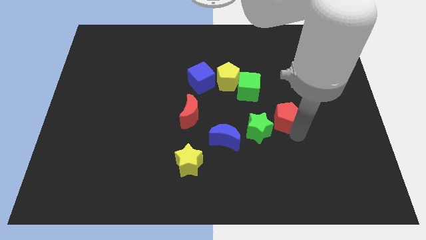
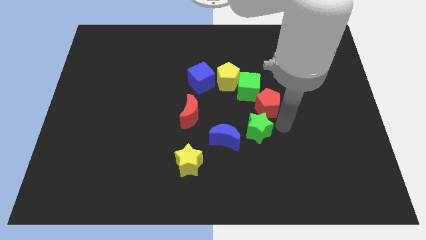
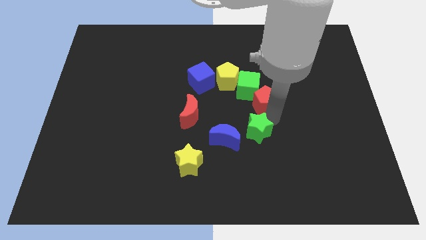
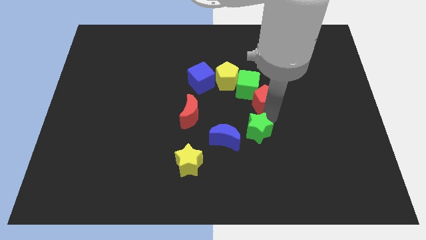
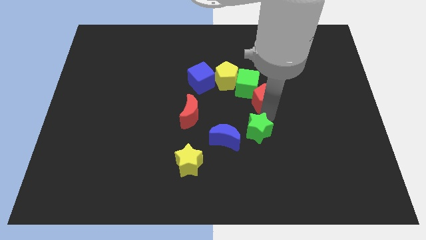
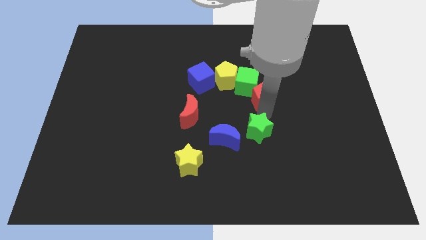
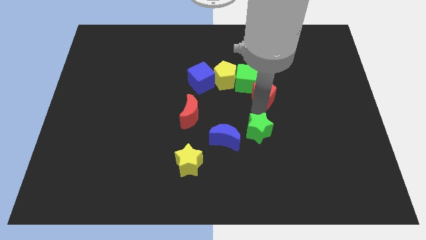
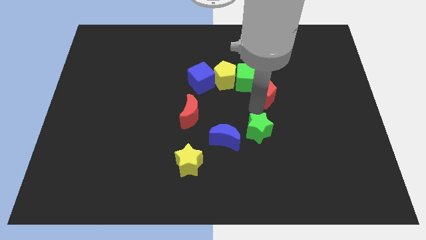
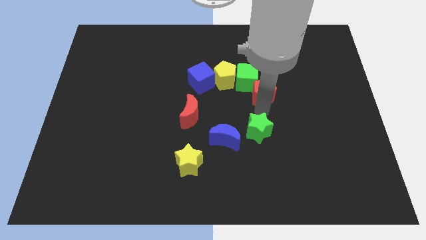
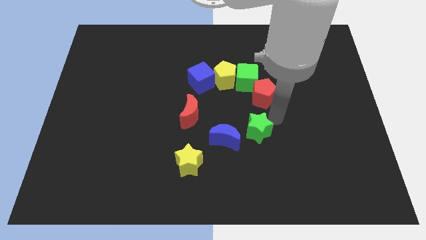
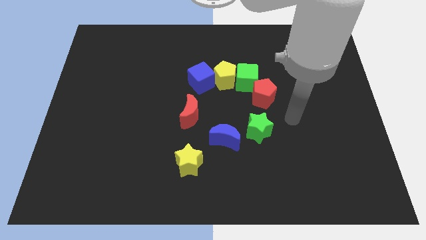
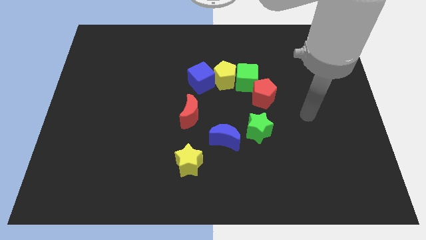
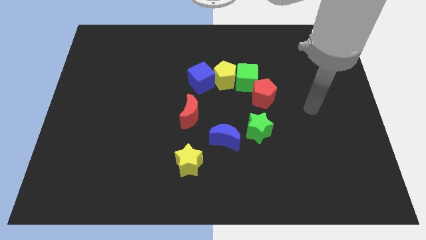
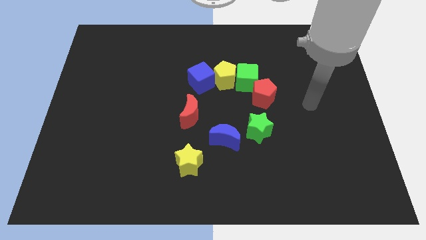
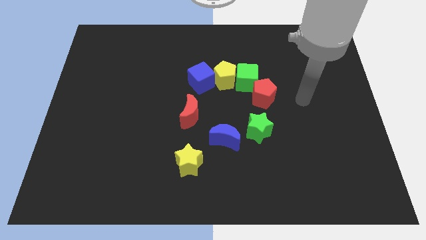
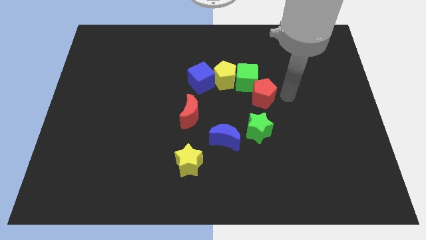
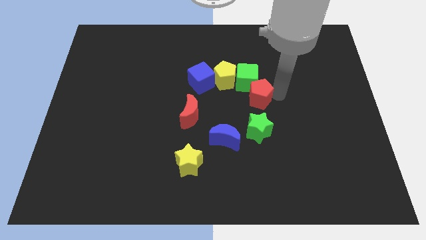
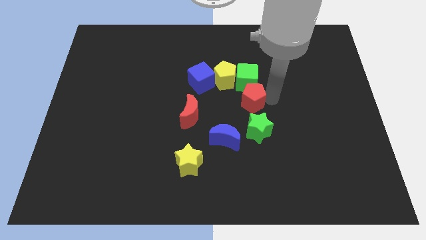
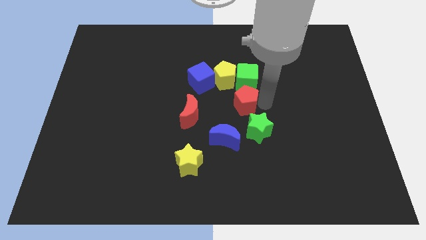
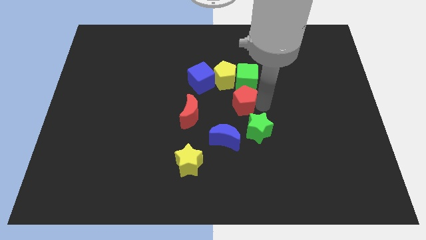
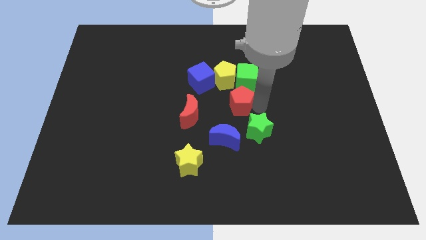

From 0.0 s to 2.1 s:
move the red pentagon below the green cube

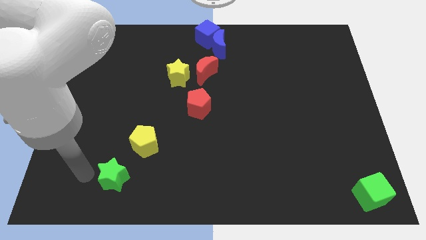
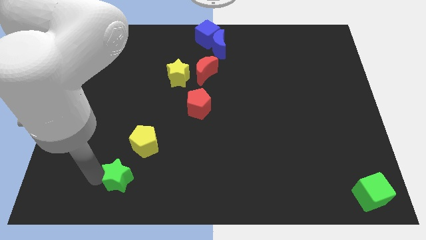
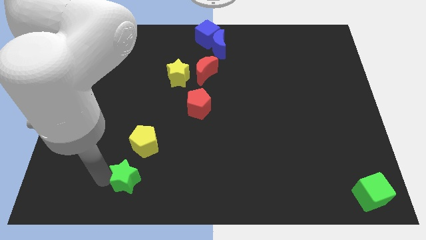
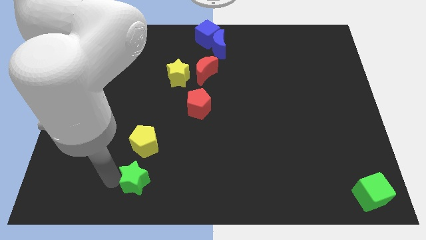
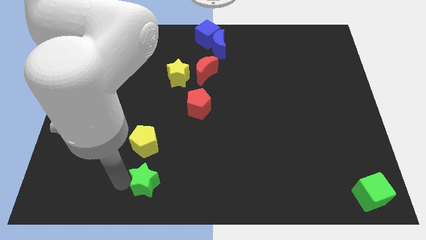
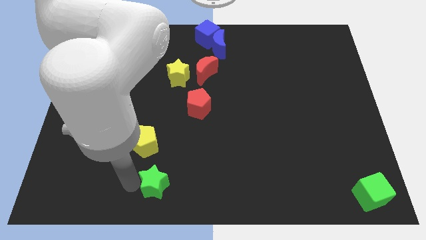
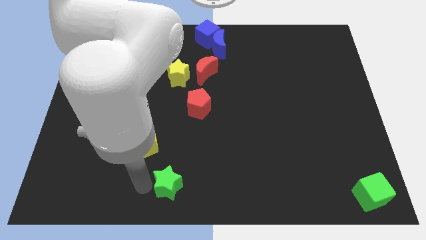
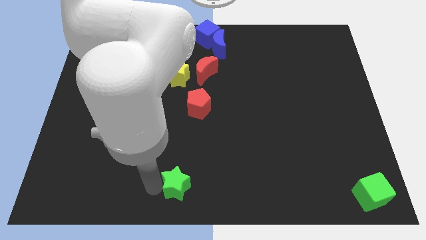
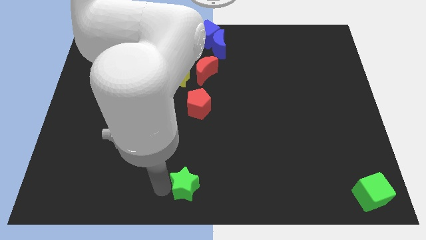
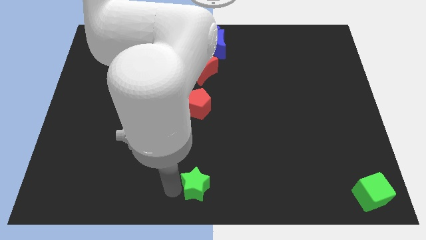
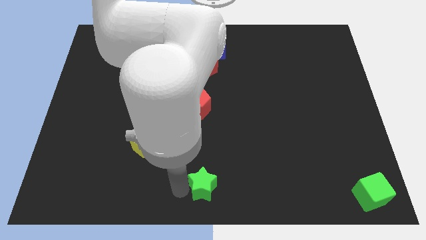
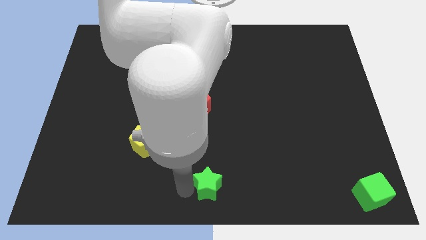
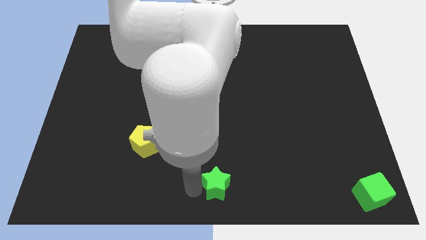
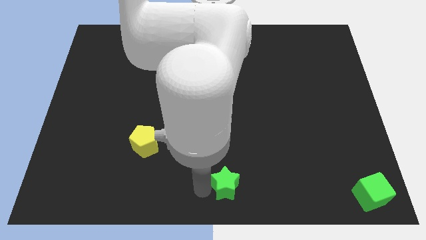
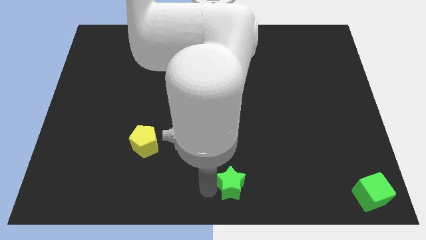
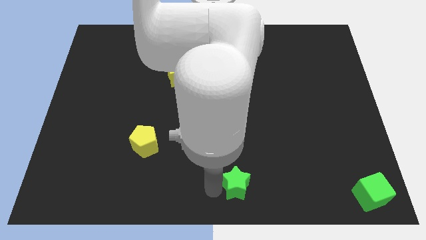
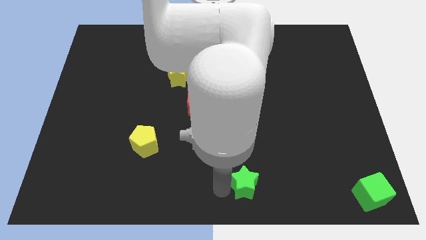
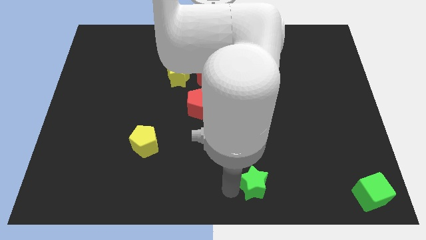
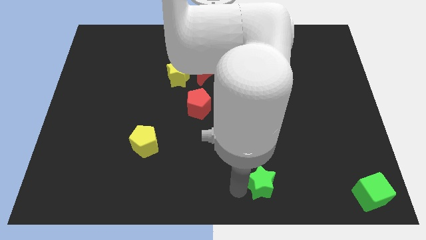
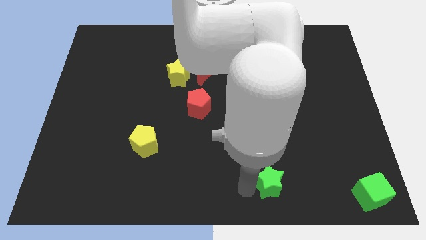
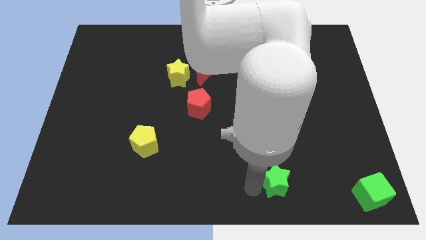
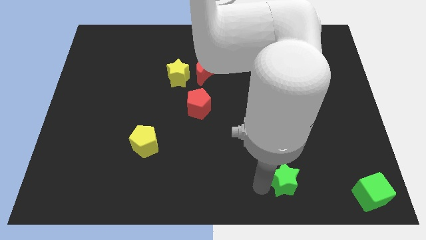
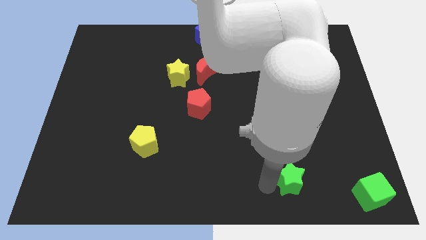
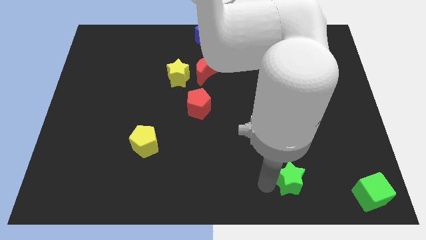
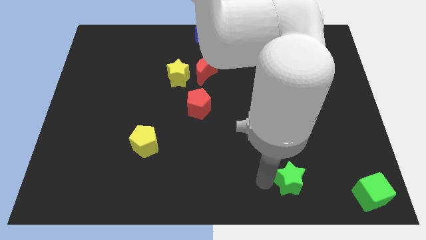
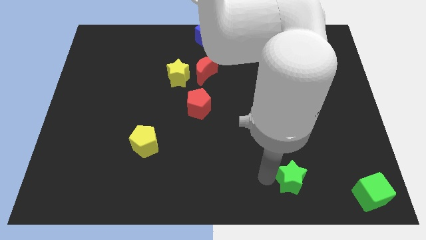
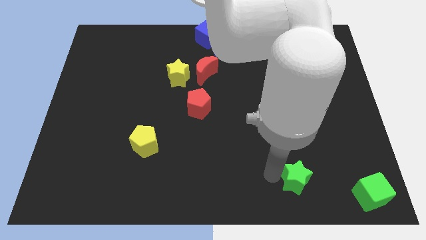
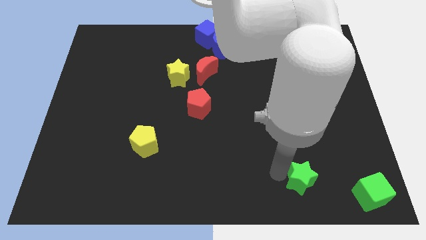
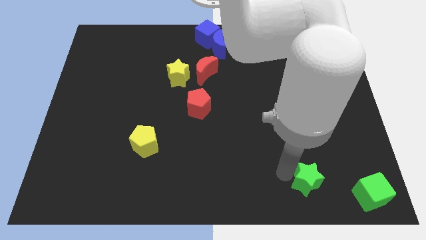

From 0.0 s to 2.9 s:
push the green star towards the green cube

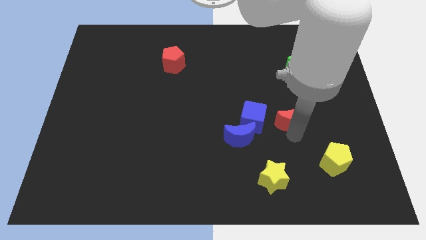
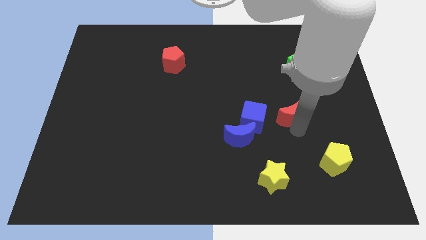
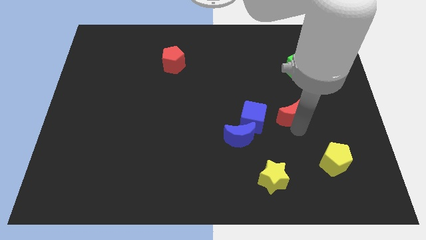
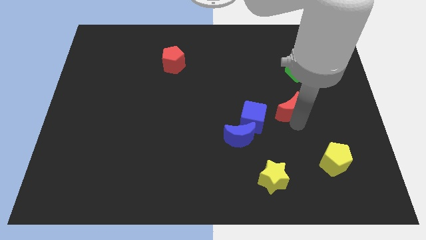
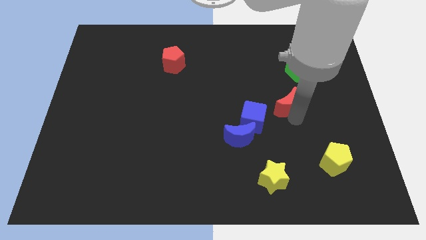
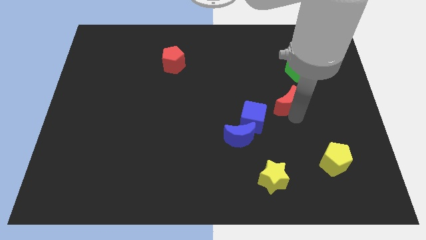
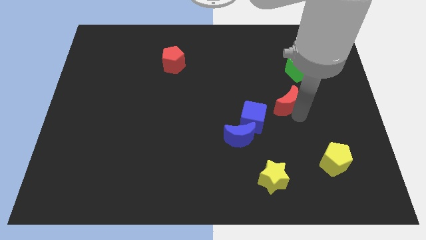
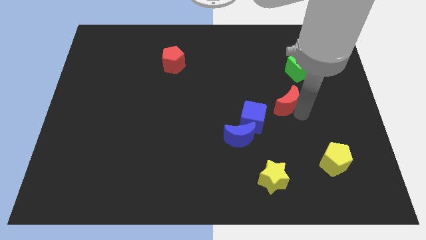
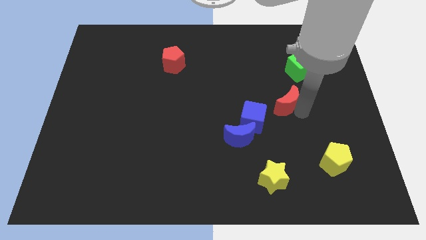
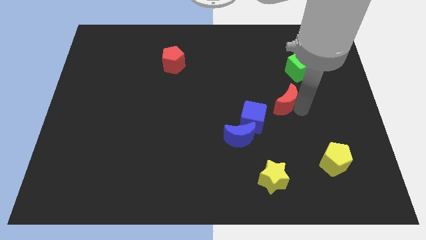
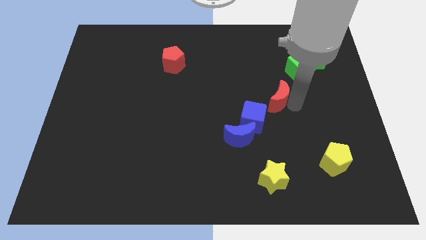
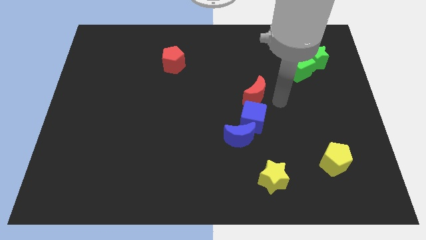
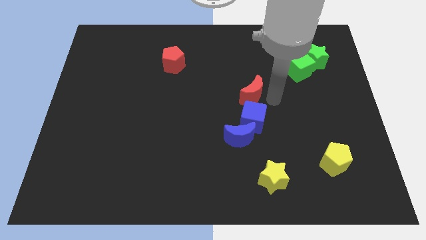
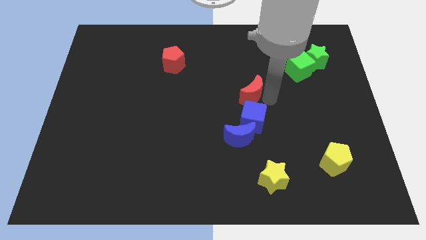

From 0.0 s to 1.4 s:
put the red moon above the blue cube

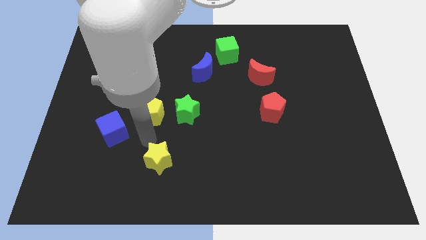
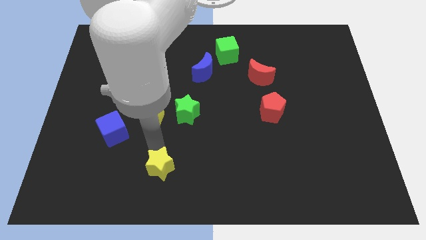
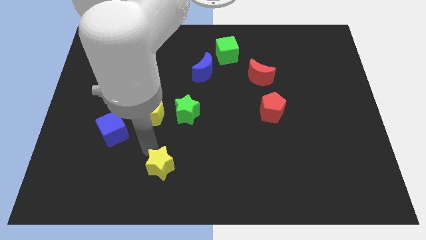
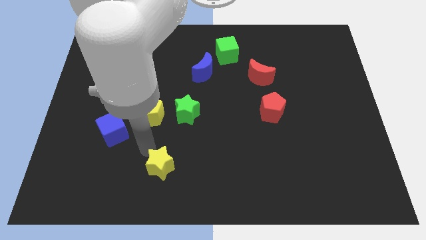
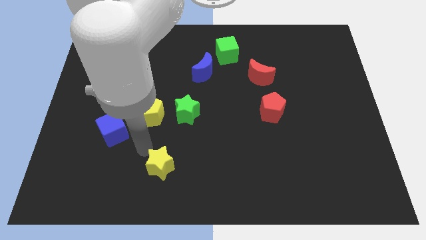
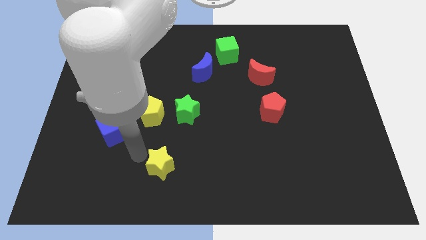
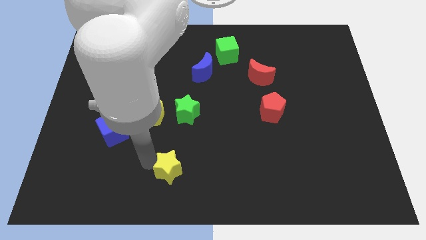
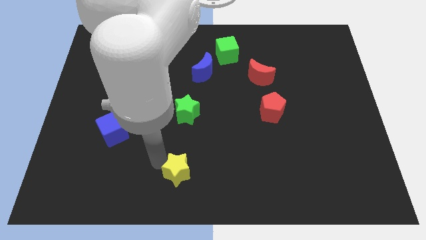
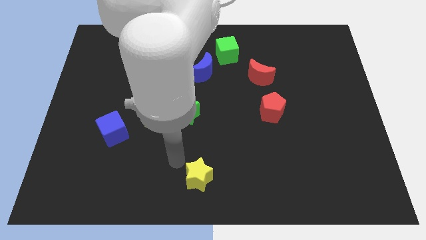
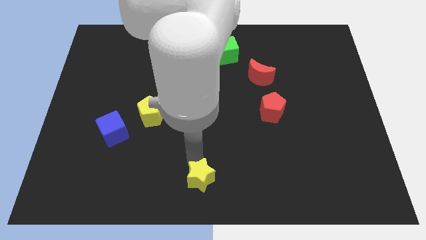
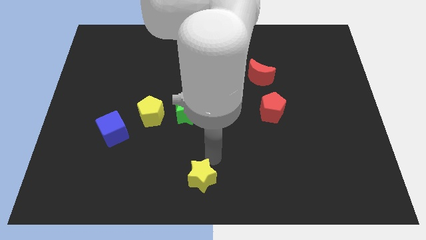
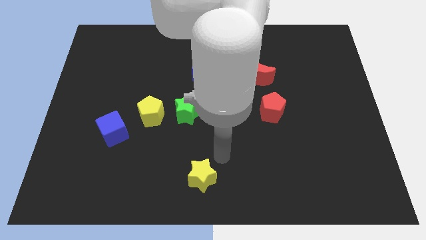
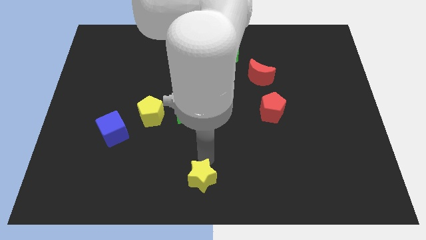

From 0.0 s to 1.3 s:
drag the yellow star towards the bottom center

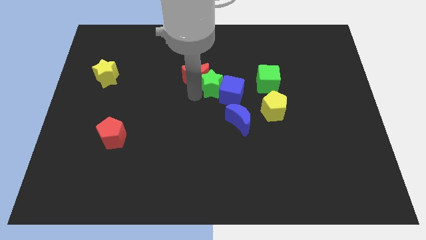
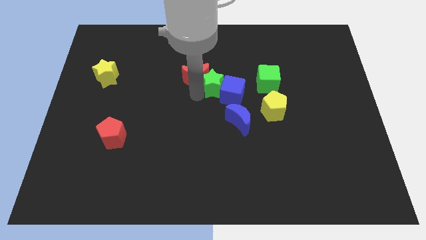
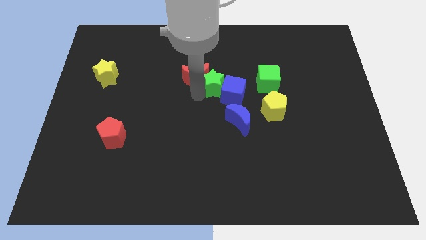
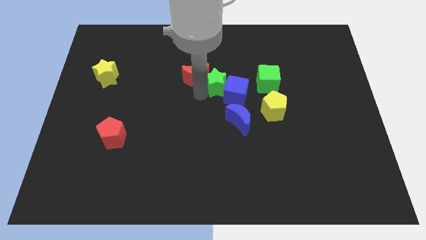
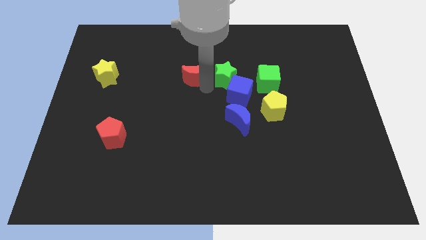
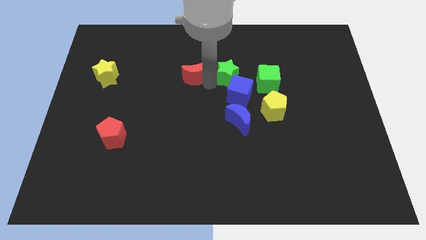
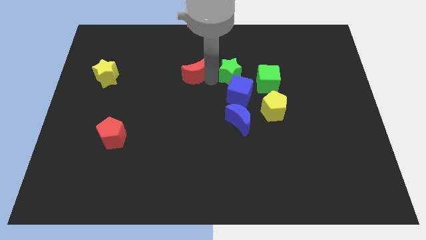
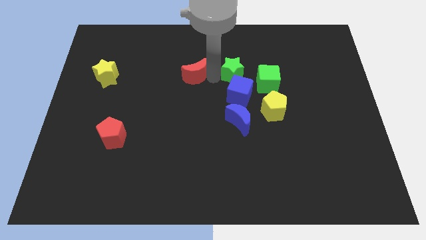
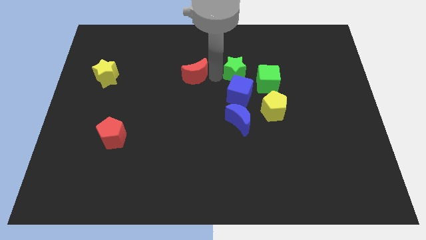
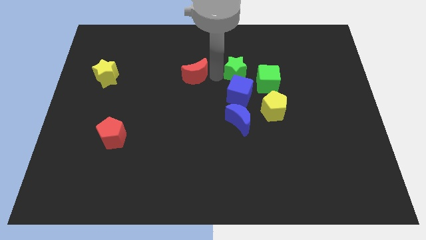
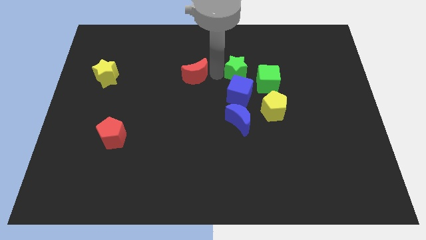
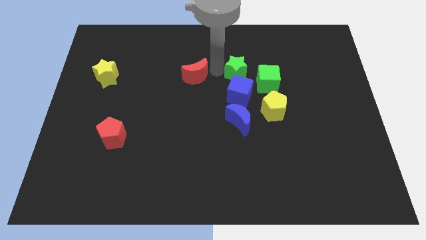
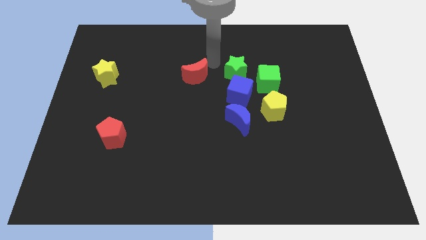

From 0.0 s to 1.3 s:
place green star above blue cube
